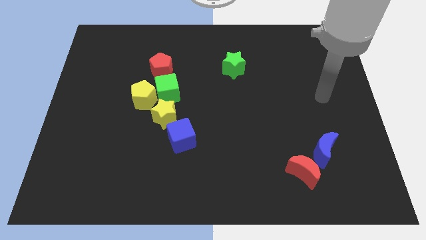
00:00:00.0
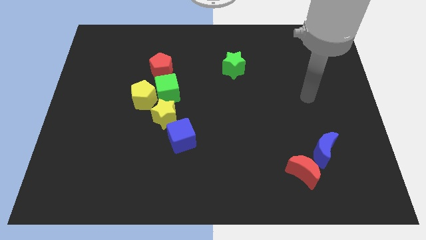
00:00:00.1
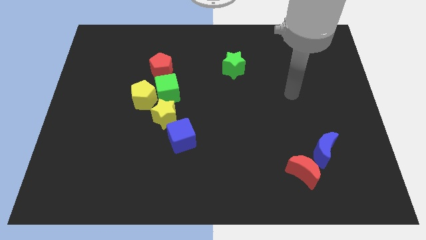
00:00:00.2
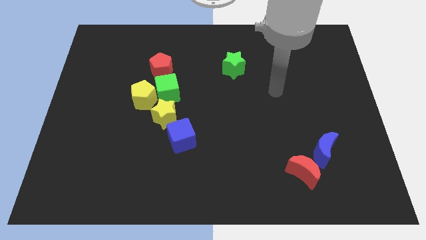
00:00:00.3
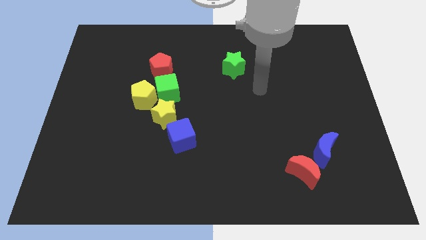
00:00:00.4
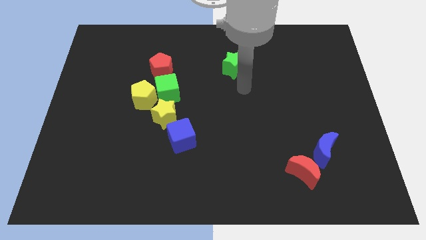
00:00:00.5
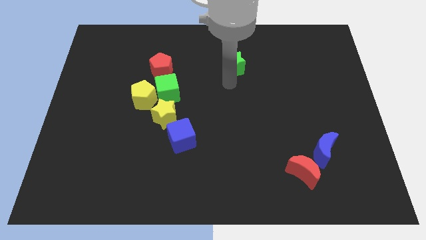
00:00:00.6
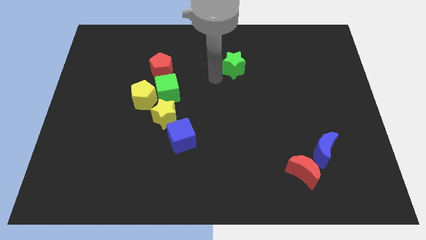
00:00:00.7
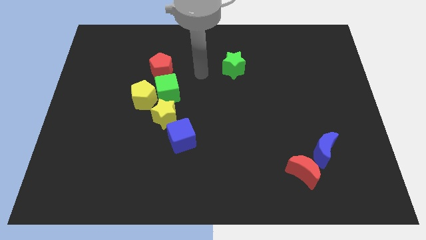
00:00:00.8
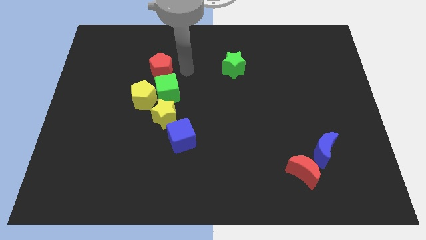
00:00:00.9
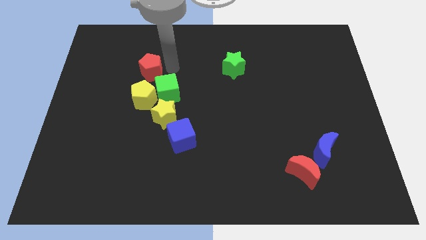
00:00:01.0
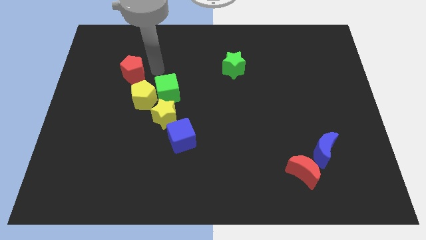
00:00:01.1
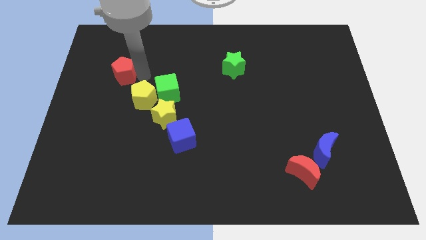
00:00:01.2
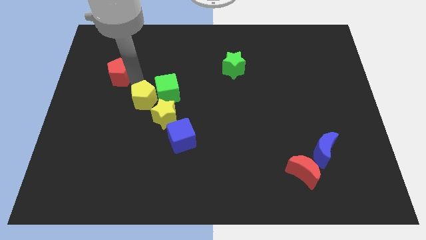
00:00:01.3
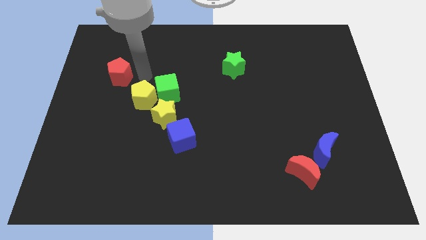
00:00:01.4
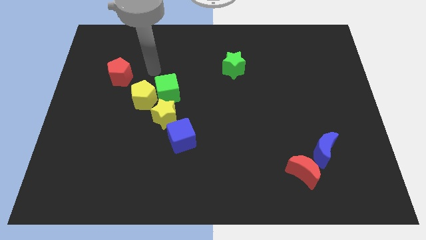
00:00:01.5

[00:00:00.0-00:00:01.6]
separate the red pentagon from the green cube

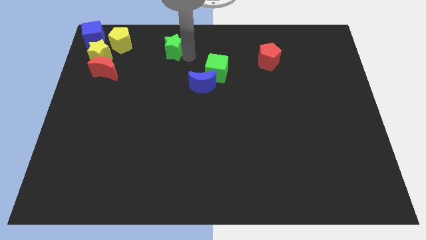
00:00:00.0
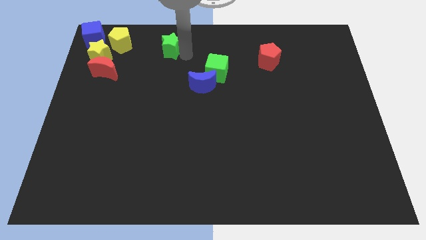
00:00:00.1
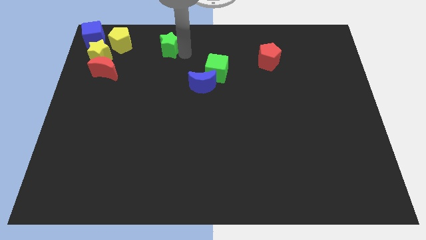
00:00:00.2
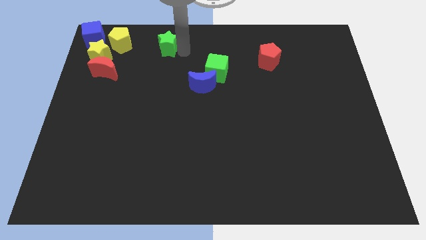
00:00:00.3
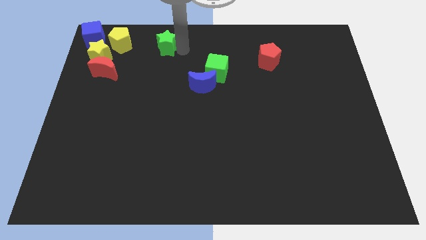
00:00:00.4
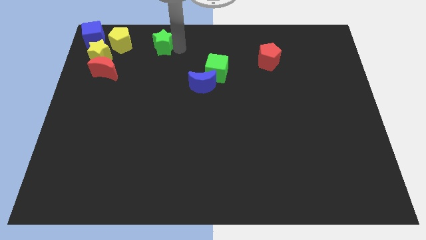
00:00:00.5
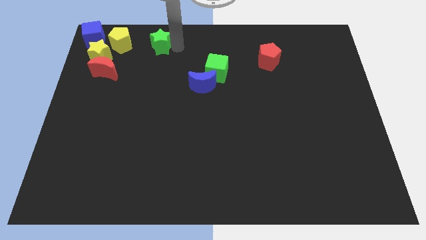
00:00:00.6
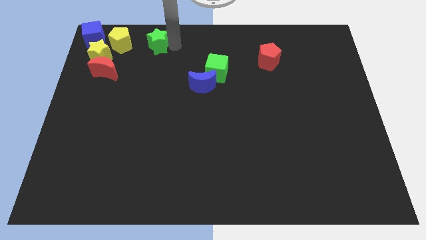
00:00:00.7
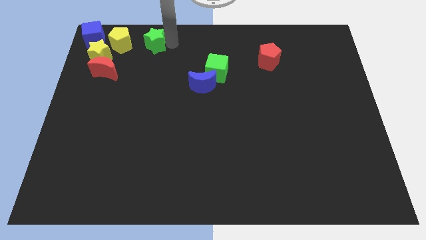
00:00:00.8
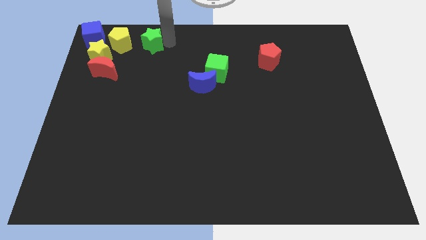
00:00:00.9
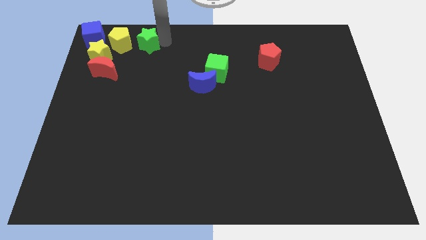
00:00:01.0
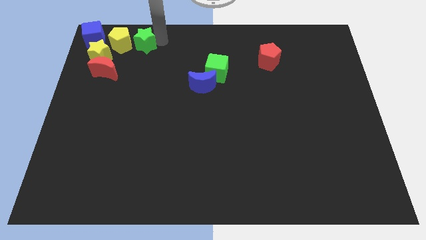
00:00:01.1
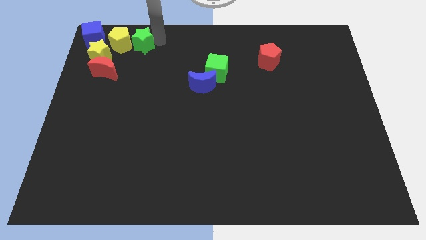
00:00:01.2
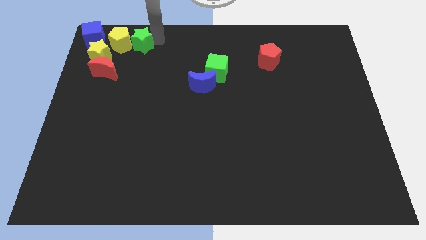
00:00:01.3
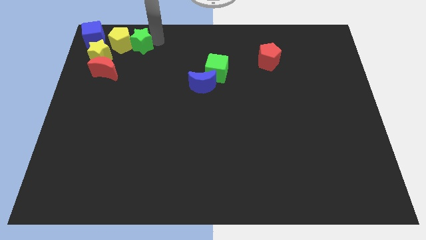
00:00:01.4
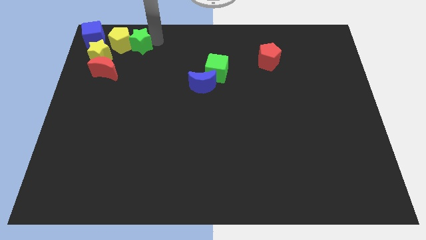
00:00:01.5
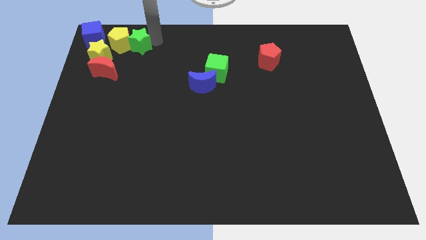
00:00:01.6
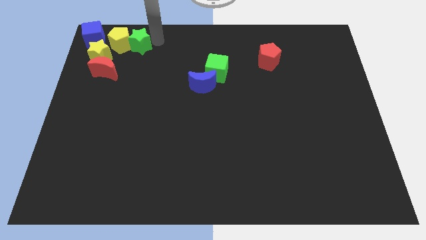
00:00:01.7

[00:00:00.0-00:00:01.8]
drag the green star into the right side of the yellow pentagon

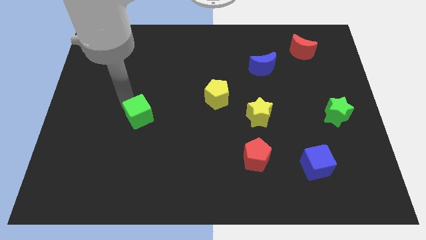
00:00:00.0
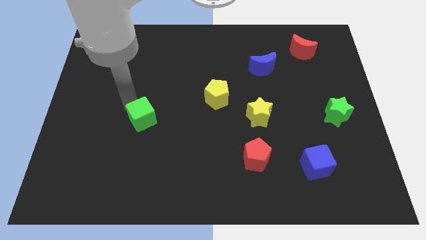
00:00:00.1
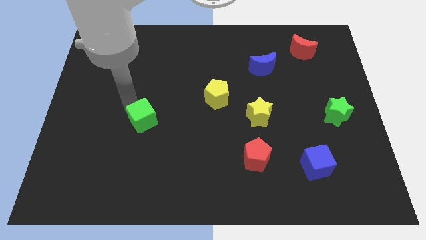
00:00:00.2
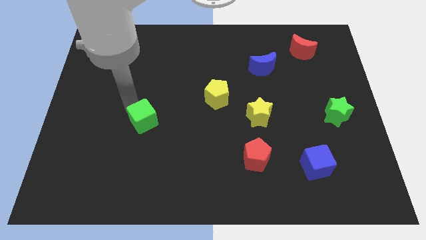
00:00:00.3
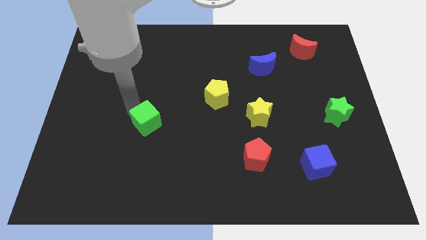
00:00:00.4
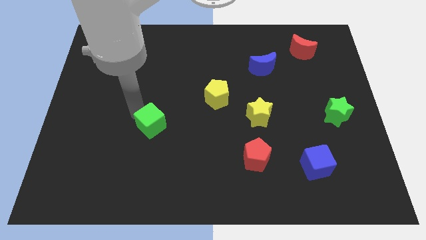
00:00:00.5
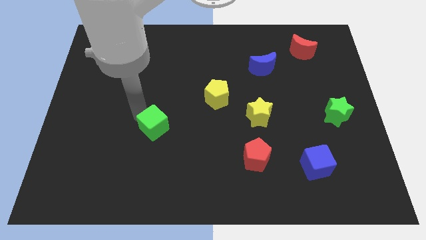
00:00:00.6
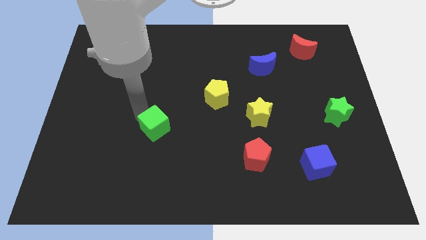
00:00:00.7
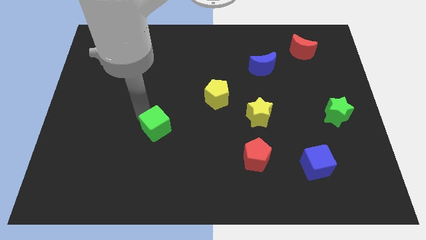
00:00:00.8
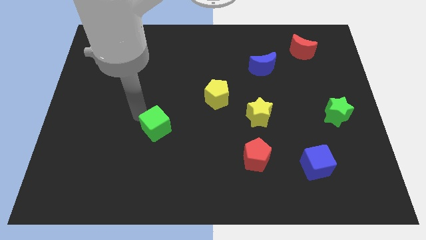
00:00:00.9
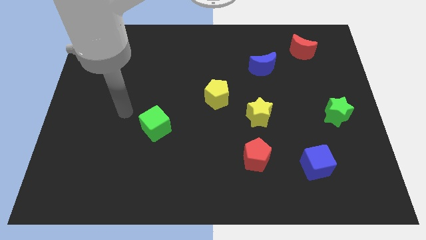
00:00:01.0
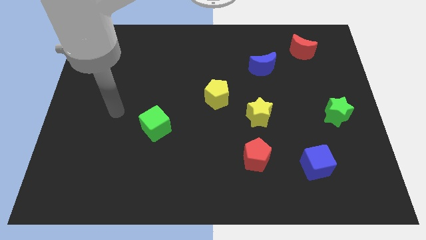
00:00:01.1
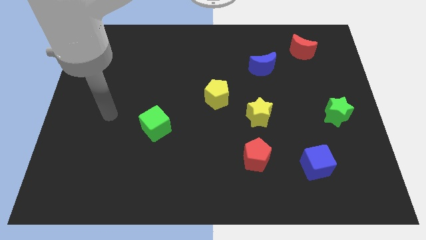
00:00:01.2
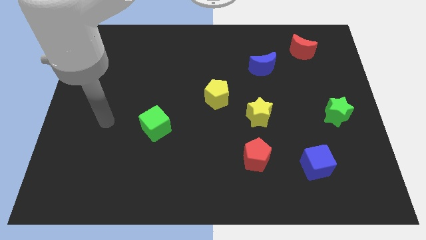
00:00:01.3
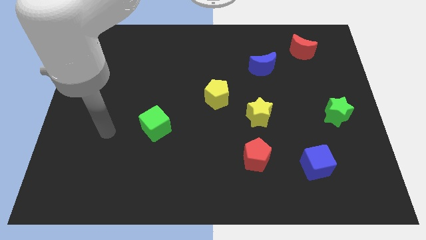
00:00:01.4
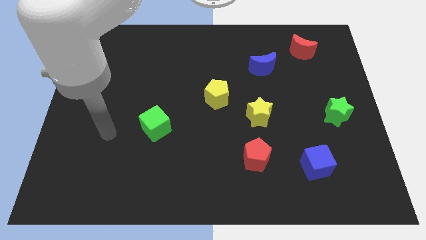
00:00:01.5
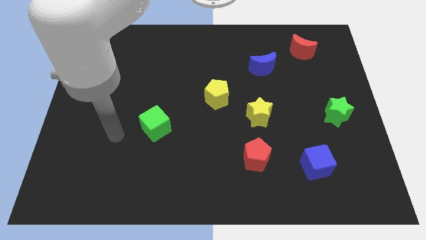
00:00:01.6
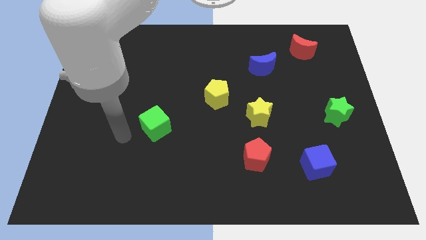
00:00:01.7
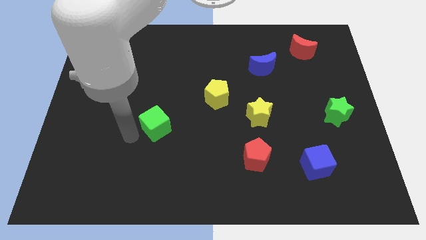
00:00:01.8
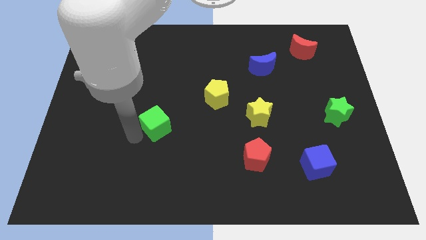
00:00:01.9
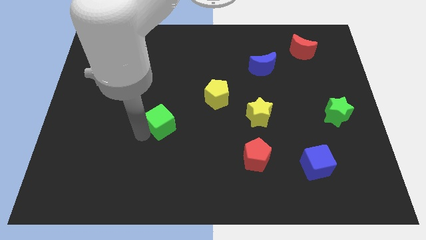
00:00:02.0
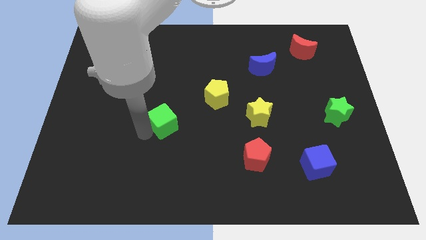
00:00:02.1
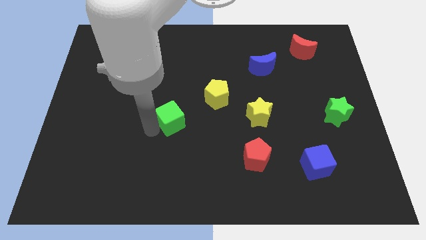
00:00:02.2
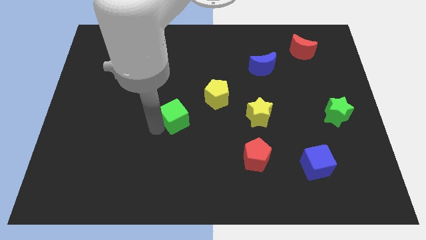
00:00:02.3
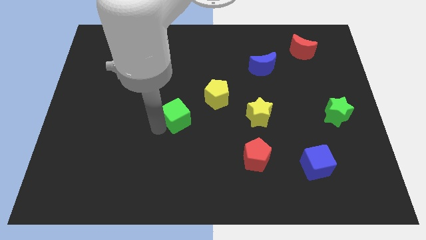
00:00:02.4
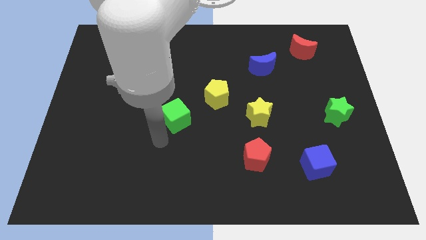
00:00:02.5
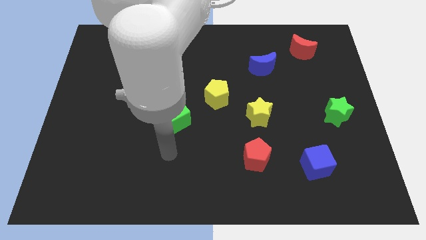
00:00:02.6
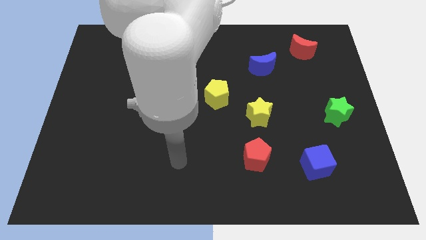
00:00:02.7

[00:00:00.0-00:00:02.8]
push the green cube to the bottom left of the yellow pentagon

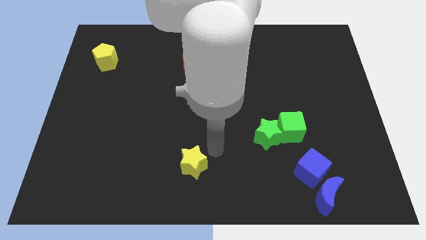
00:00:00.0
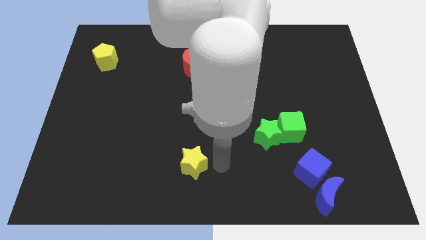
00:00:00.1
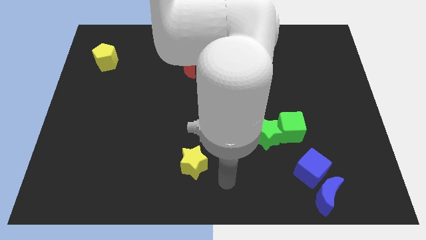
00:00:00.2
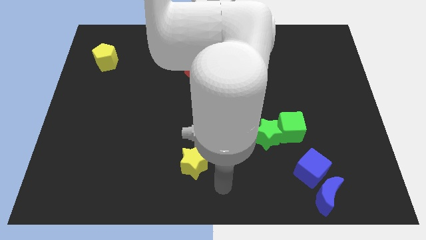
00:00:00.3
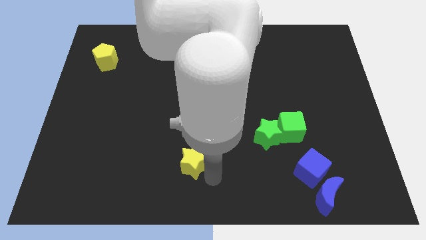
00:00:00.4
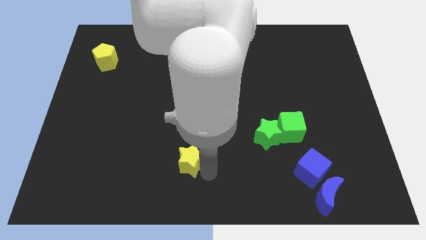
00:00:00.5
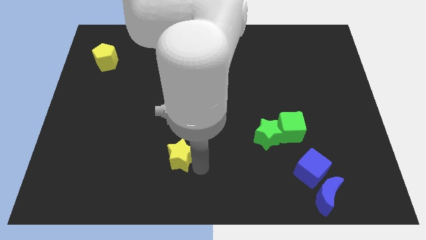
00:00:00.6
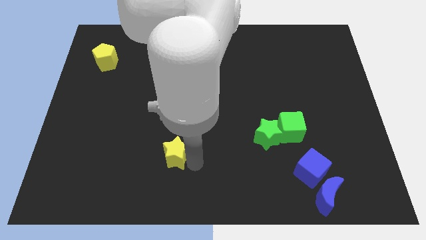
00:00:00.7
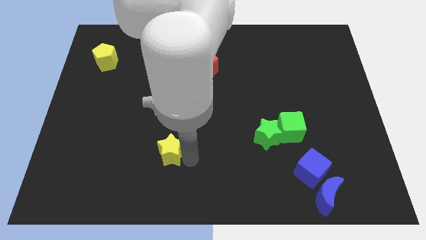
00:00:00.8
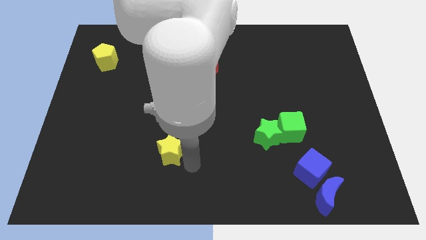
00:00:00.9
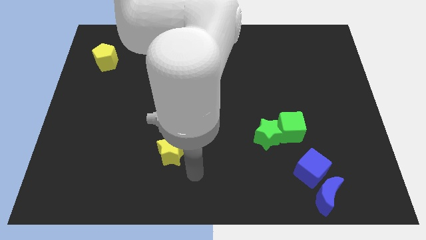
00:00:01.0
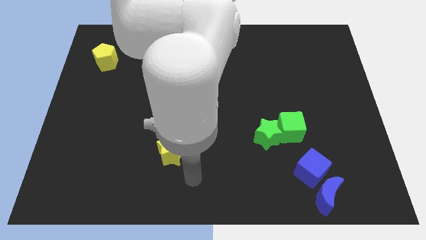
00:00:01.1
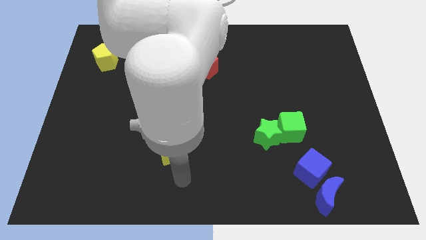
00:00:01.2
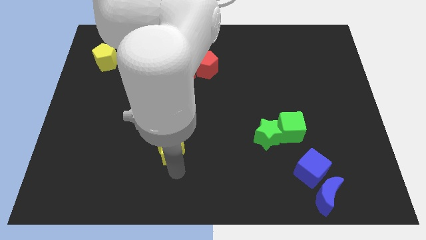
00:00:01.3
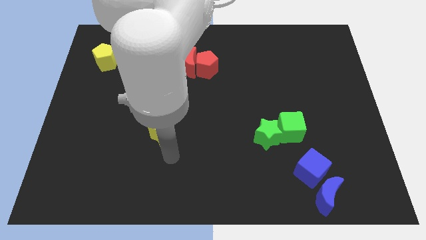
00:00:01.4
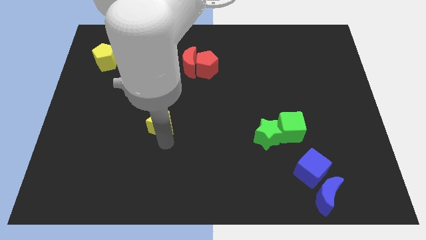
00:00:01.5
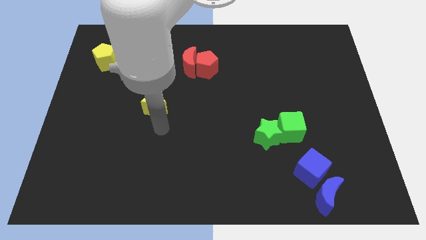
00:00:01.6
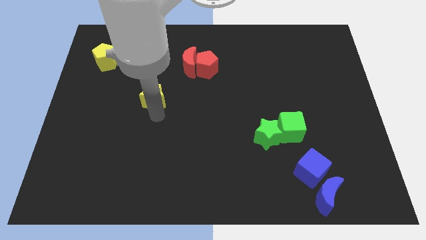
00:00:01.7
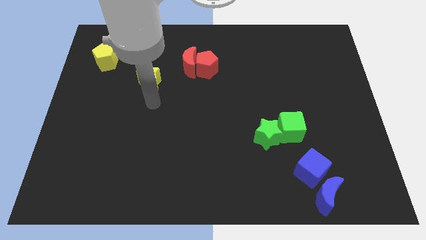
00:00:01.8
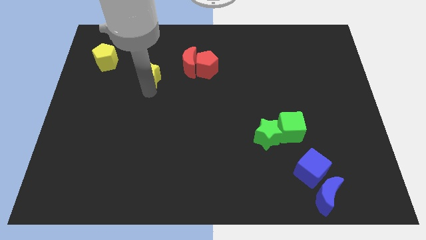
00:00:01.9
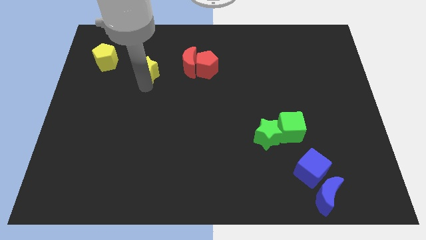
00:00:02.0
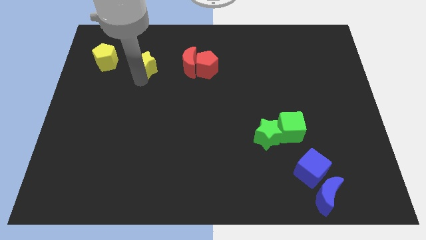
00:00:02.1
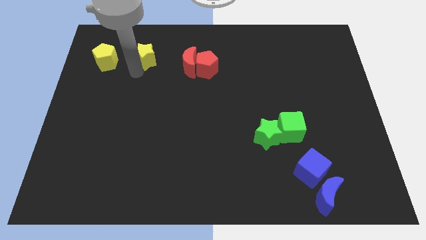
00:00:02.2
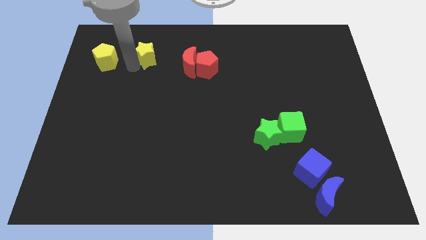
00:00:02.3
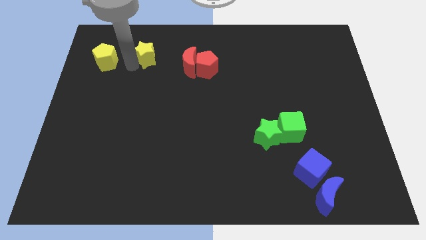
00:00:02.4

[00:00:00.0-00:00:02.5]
put the yellow star right to the yellow pentagon

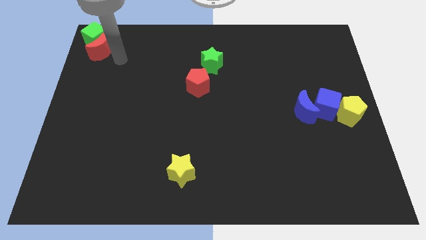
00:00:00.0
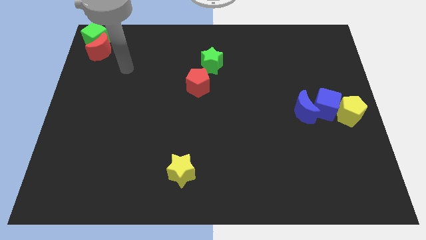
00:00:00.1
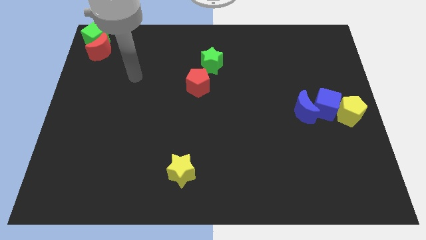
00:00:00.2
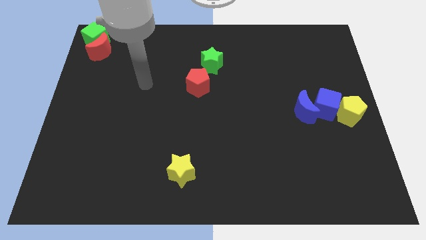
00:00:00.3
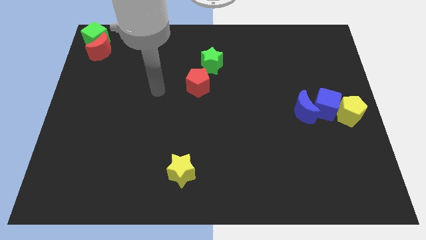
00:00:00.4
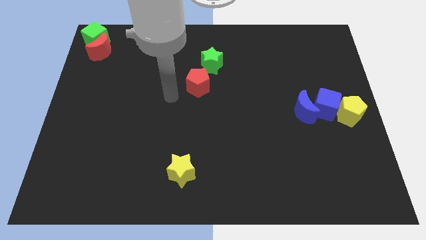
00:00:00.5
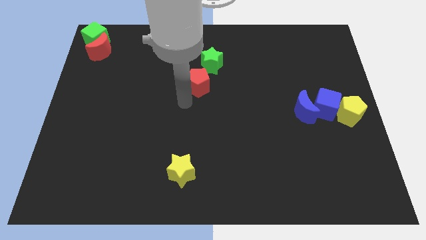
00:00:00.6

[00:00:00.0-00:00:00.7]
move the arm away from the red crescent
